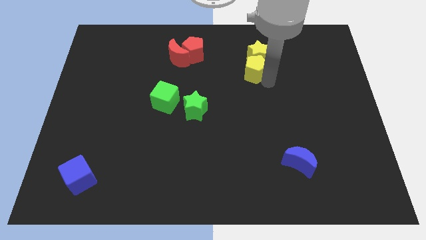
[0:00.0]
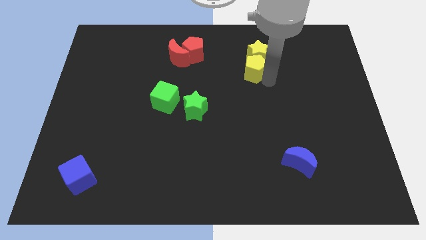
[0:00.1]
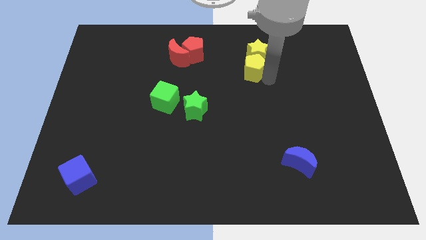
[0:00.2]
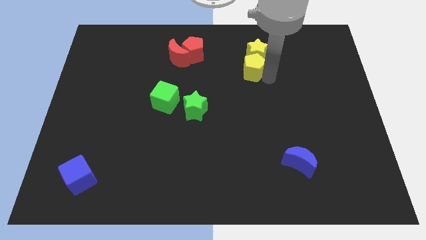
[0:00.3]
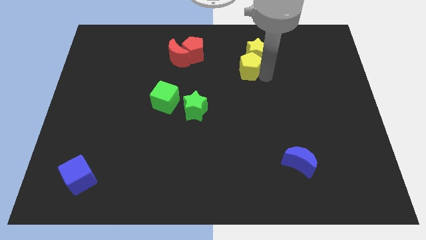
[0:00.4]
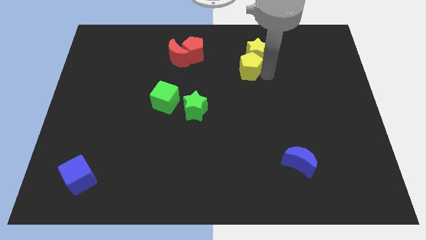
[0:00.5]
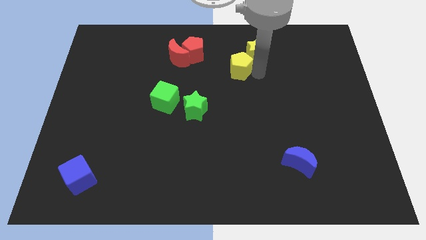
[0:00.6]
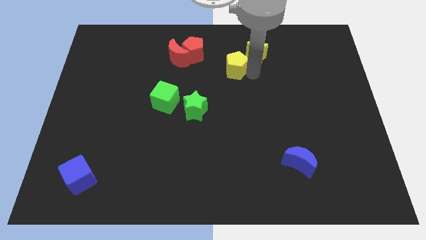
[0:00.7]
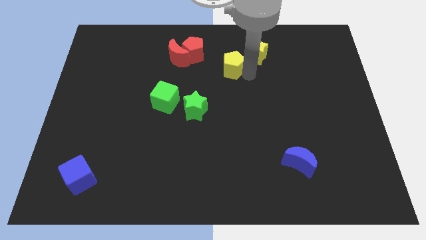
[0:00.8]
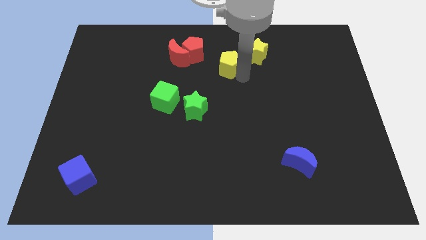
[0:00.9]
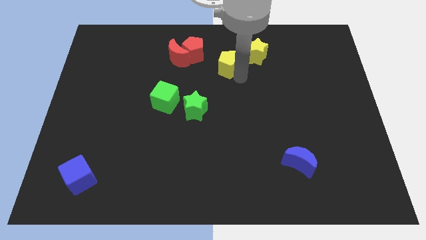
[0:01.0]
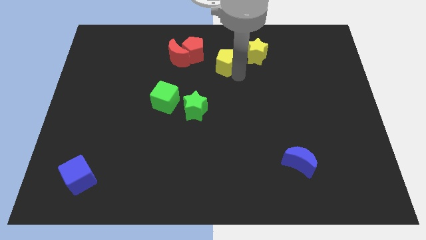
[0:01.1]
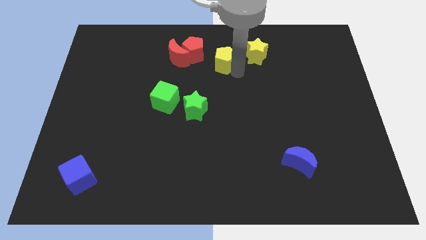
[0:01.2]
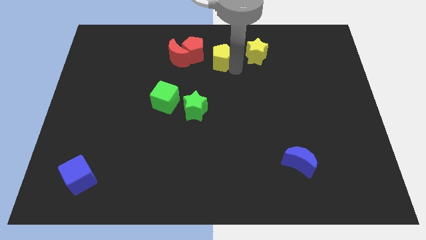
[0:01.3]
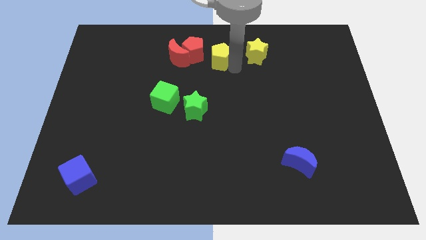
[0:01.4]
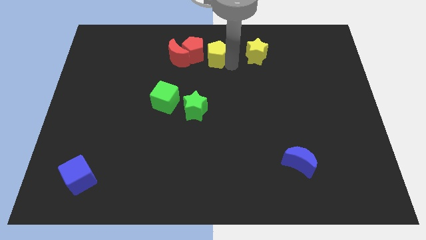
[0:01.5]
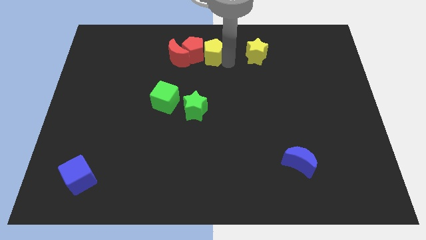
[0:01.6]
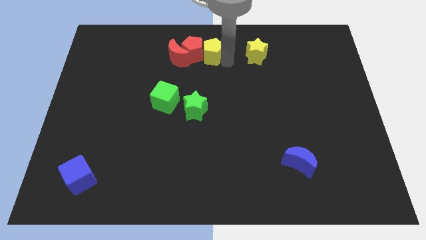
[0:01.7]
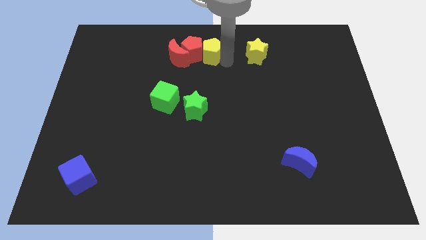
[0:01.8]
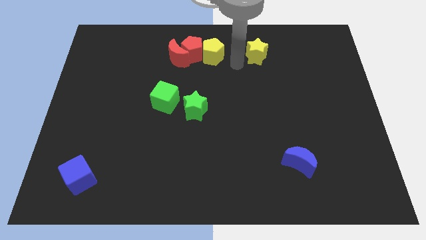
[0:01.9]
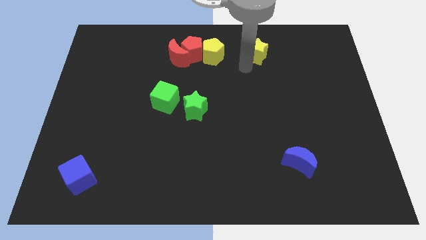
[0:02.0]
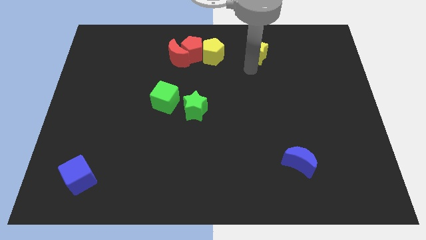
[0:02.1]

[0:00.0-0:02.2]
move the yellow pentagon to the right of the red pentagon

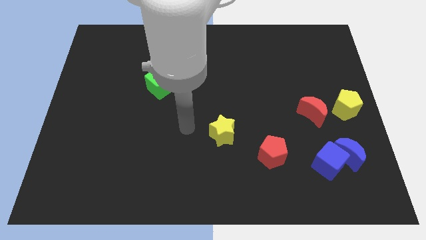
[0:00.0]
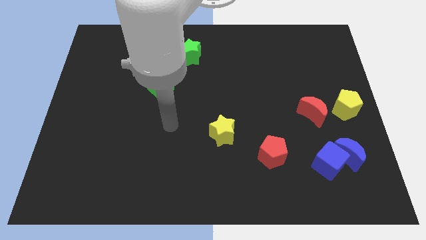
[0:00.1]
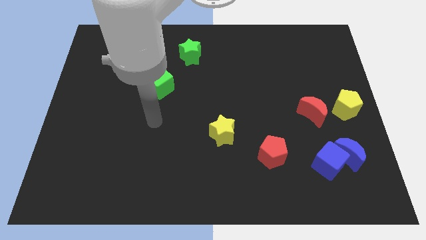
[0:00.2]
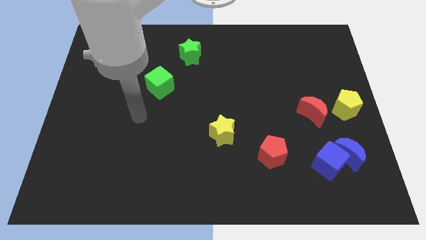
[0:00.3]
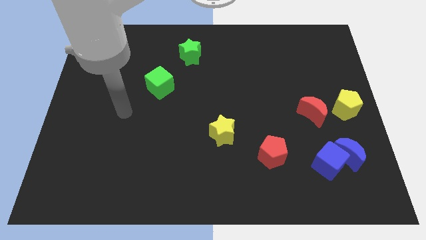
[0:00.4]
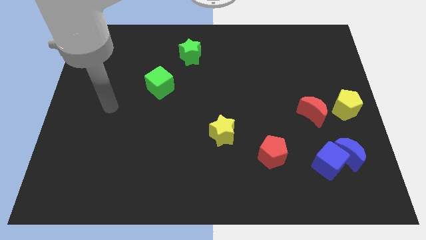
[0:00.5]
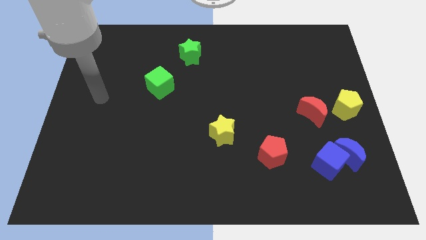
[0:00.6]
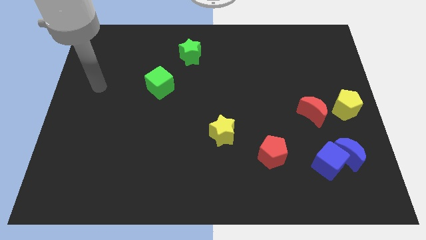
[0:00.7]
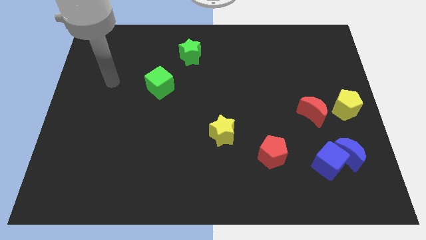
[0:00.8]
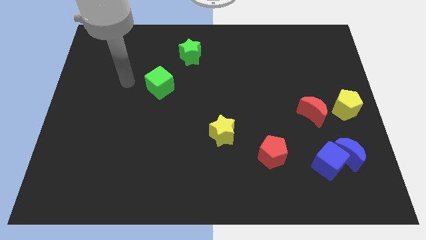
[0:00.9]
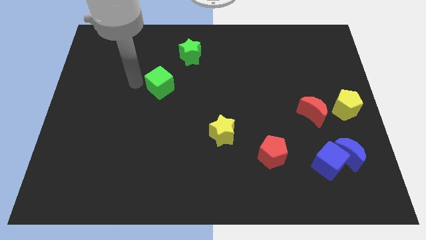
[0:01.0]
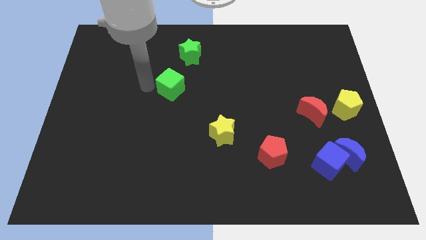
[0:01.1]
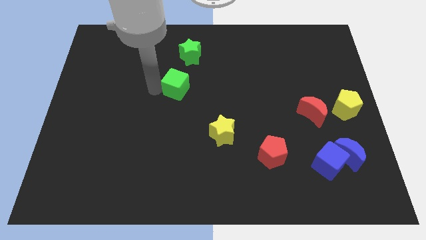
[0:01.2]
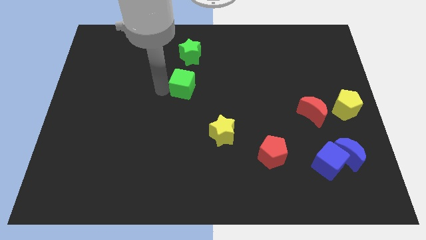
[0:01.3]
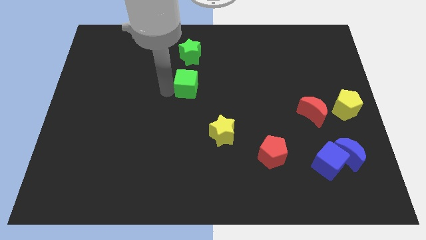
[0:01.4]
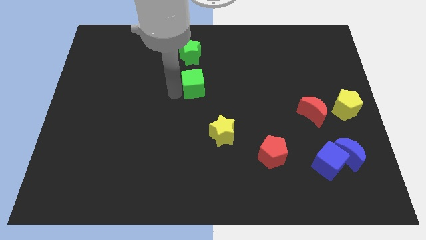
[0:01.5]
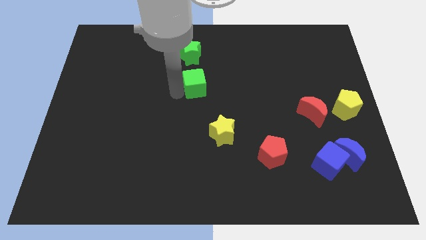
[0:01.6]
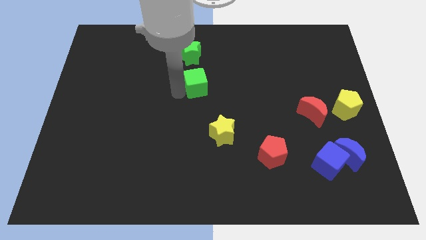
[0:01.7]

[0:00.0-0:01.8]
place the green cube below the green star

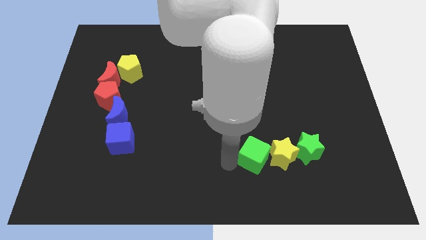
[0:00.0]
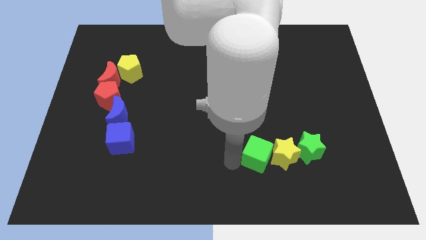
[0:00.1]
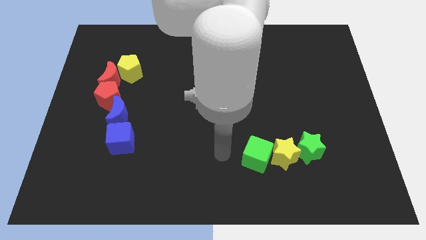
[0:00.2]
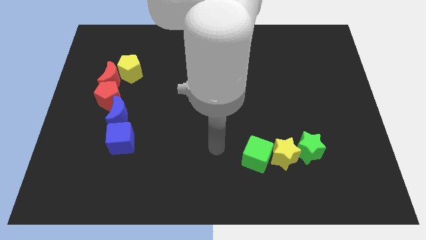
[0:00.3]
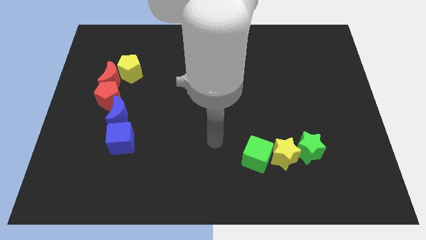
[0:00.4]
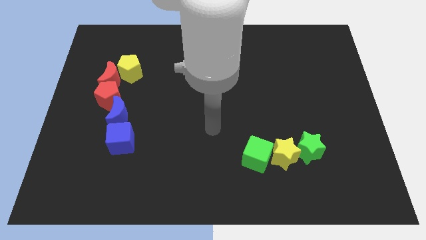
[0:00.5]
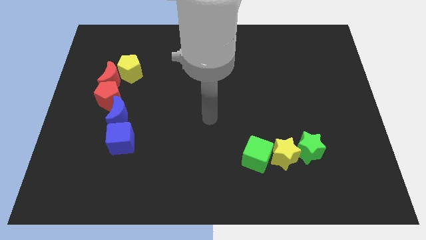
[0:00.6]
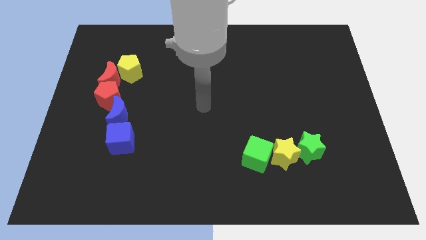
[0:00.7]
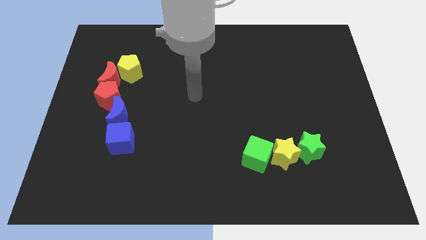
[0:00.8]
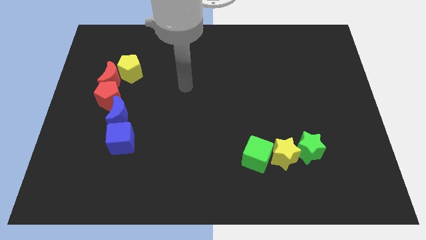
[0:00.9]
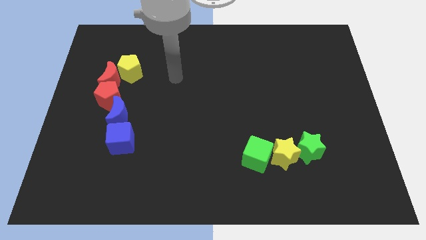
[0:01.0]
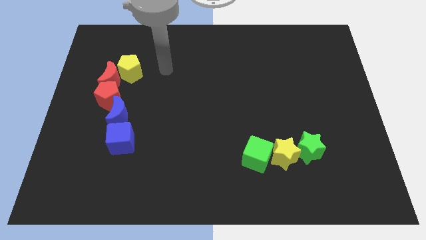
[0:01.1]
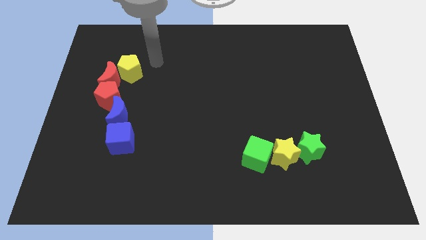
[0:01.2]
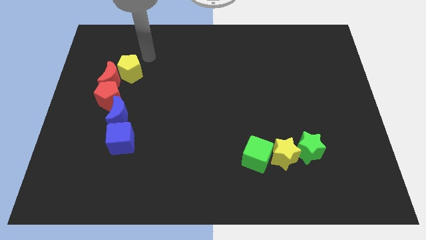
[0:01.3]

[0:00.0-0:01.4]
move the arm away from the green cube

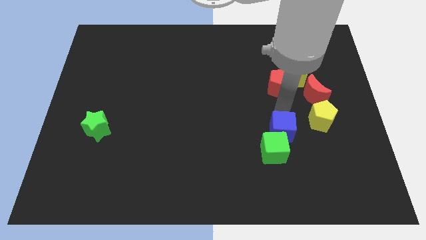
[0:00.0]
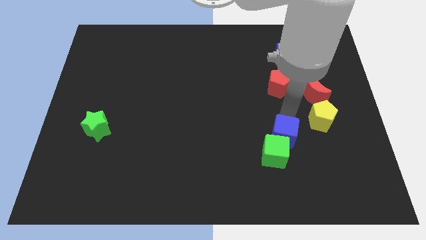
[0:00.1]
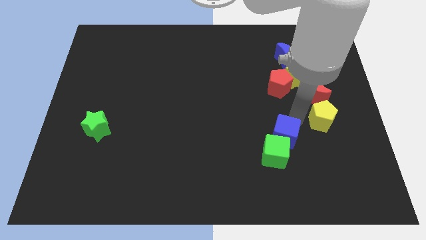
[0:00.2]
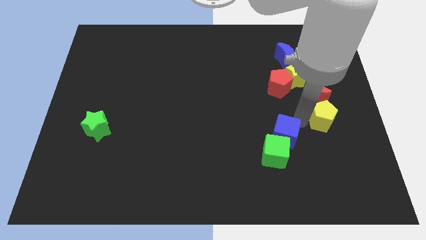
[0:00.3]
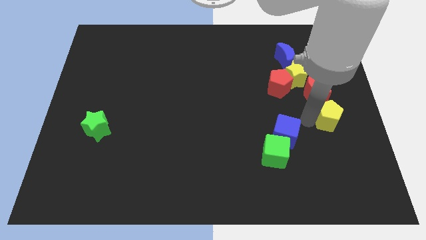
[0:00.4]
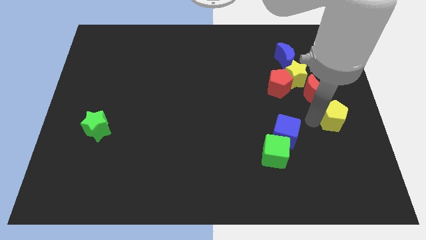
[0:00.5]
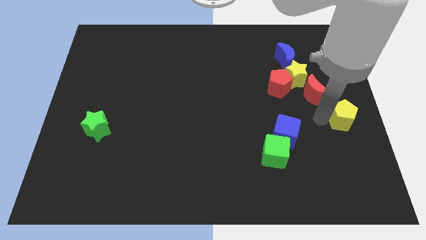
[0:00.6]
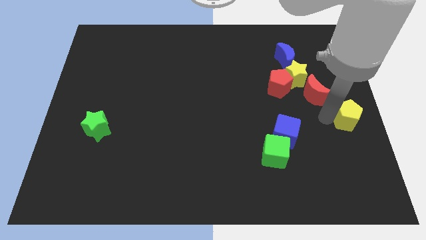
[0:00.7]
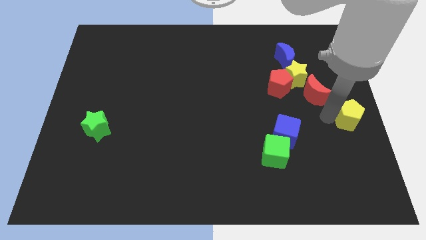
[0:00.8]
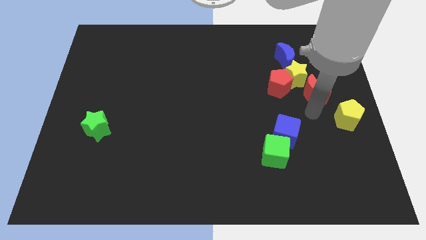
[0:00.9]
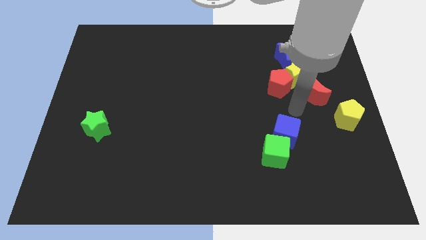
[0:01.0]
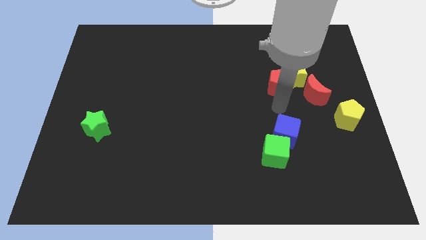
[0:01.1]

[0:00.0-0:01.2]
move the yellow pentagon towards the center right of the board

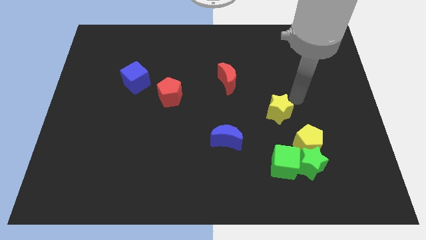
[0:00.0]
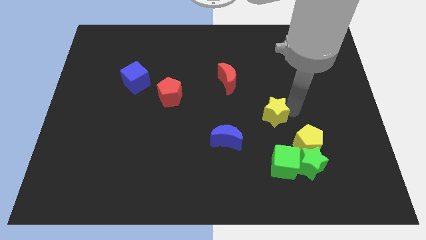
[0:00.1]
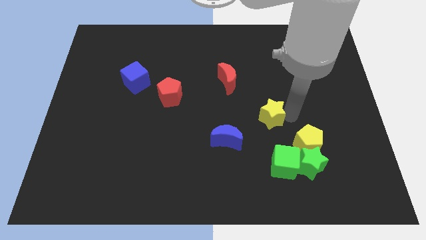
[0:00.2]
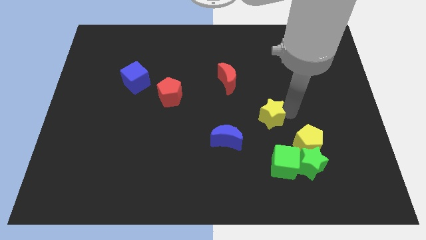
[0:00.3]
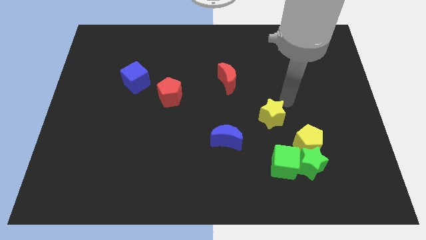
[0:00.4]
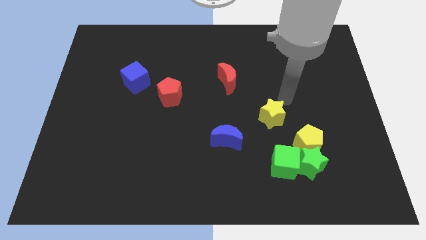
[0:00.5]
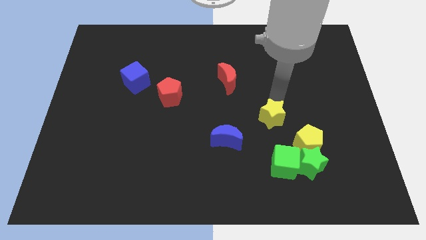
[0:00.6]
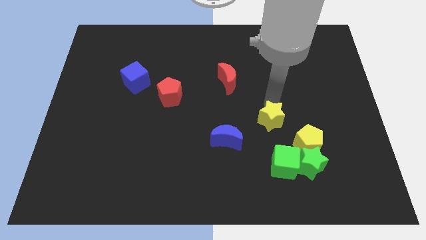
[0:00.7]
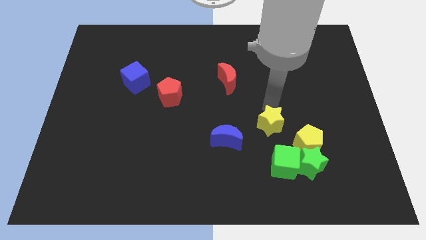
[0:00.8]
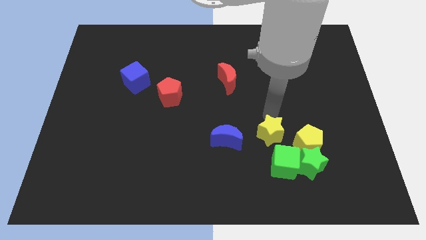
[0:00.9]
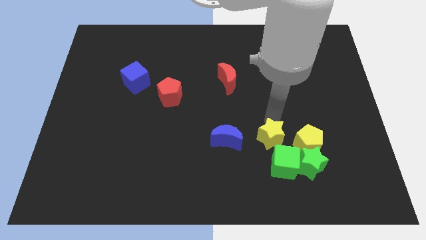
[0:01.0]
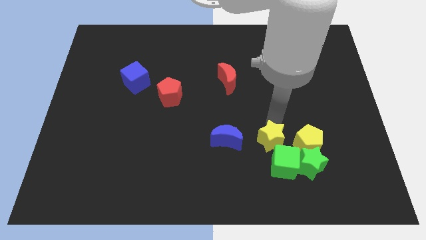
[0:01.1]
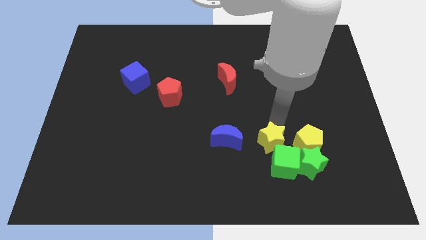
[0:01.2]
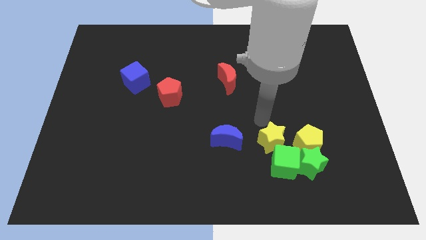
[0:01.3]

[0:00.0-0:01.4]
place the yellow star above the green cube

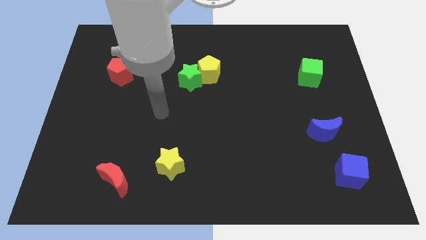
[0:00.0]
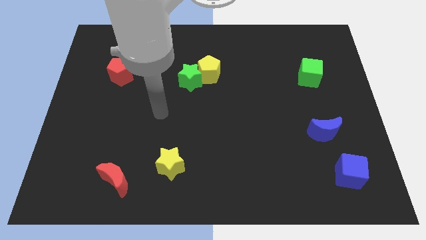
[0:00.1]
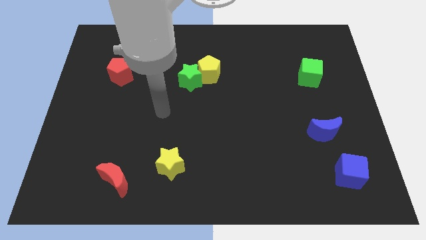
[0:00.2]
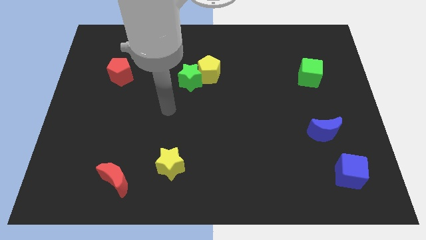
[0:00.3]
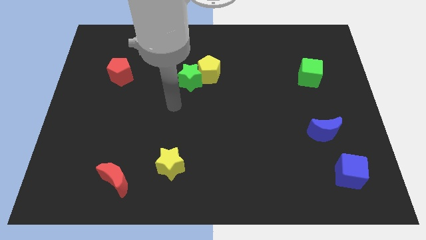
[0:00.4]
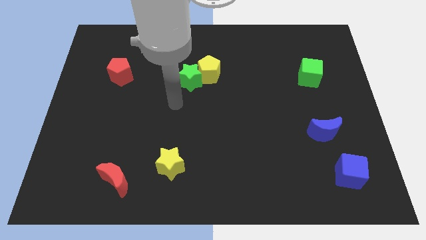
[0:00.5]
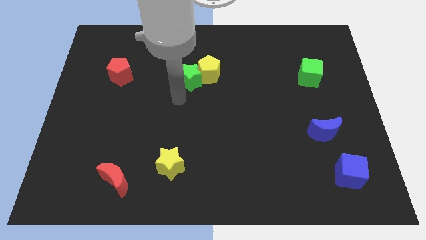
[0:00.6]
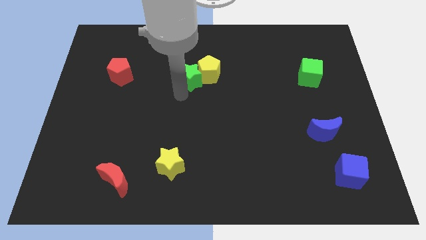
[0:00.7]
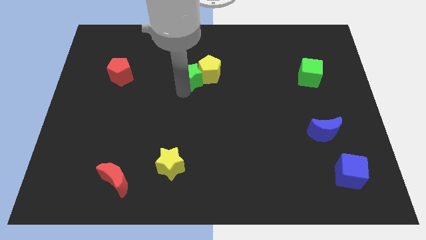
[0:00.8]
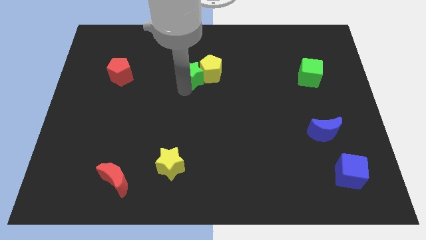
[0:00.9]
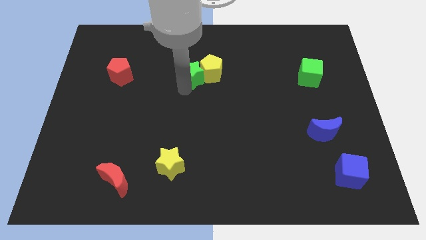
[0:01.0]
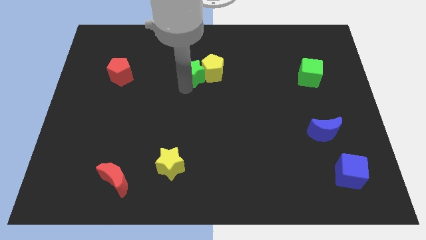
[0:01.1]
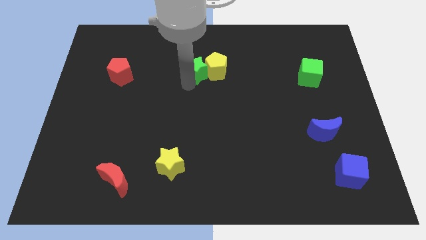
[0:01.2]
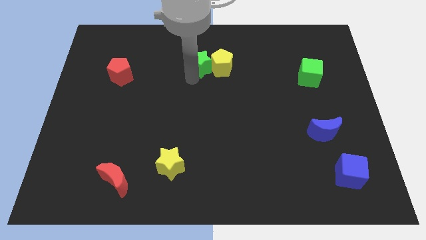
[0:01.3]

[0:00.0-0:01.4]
push the green star and yellow pentagon to the top of the board
